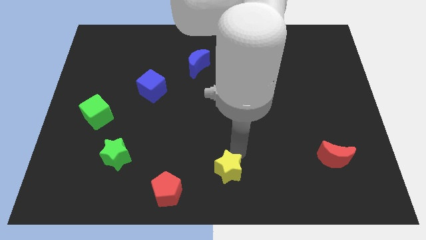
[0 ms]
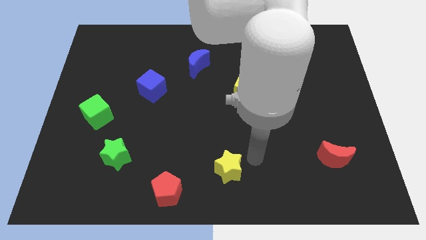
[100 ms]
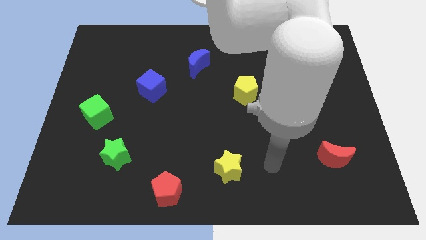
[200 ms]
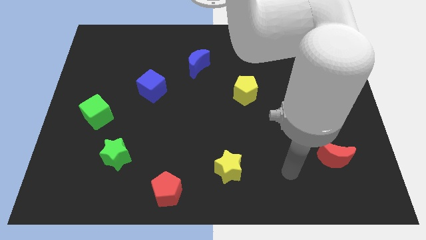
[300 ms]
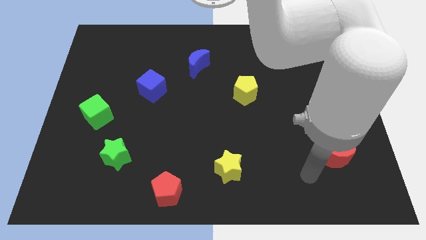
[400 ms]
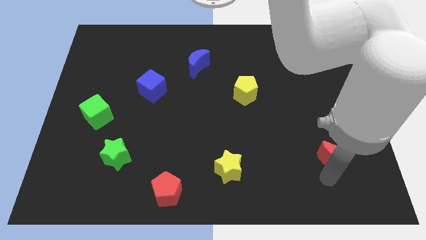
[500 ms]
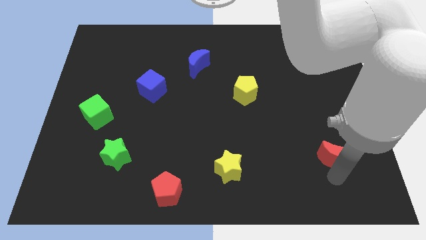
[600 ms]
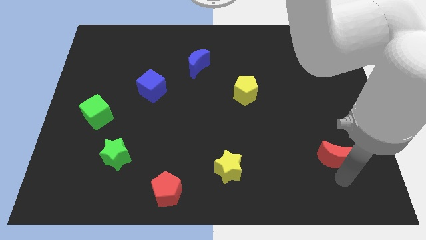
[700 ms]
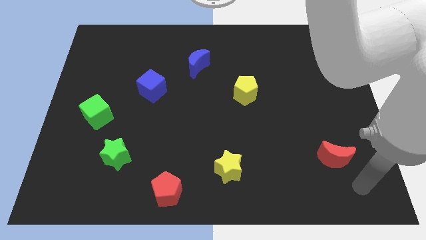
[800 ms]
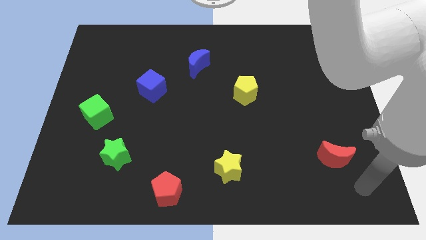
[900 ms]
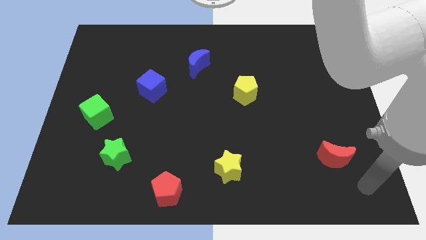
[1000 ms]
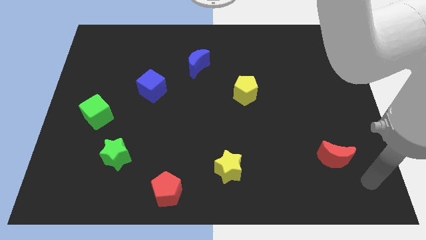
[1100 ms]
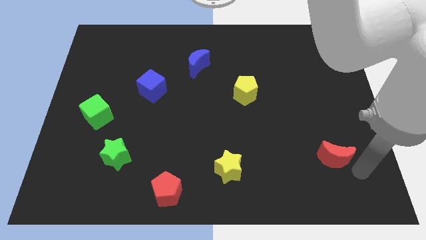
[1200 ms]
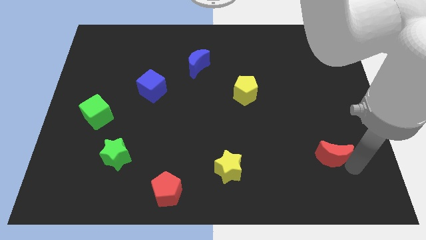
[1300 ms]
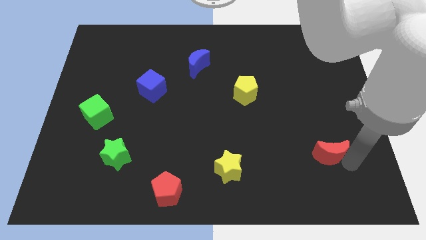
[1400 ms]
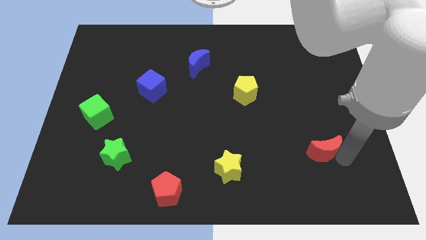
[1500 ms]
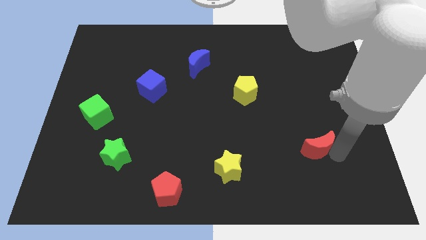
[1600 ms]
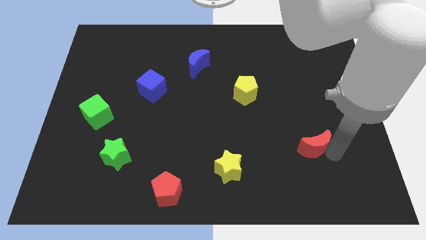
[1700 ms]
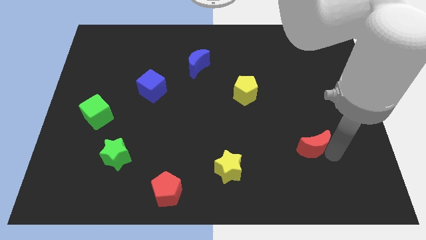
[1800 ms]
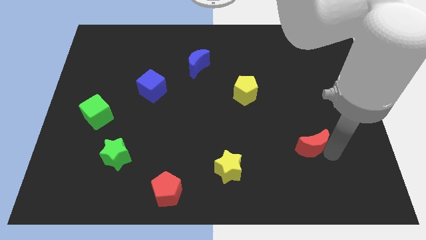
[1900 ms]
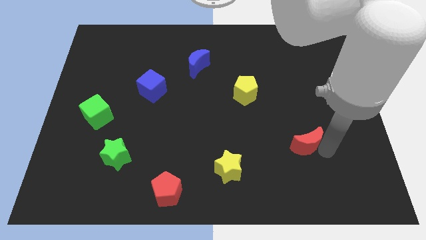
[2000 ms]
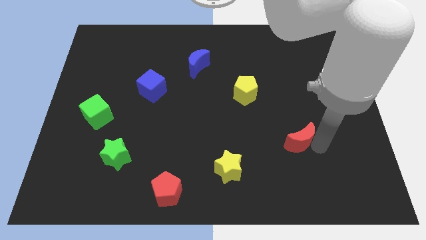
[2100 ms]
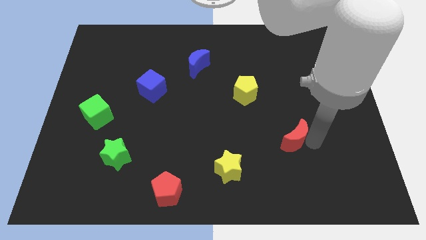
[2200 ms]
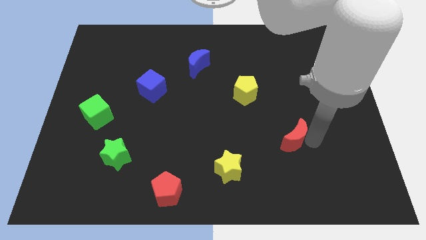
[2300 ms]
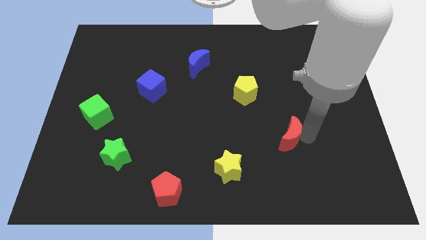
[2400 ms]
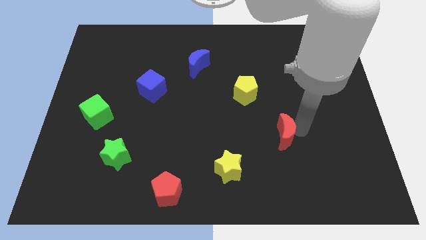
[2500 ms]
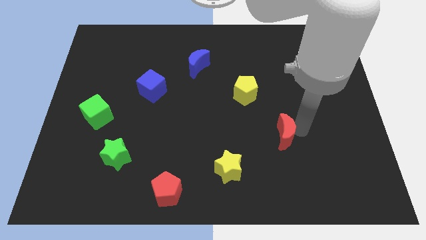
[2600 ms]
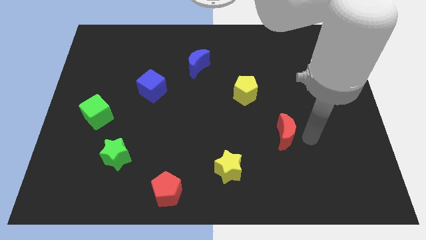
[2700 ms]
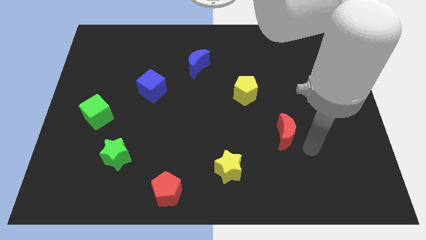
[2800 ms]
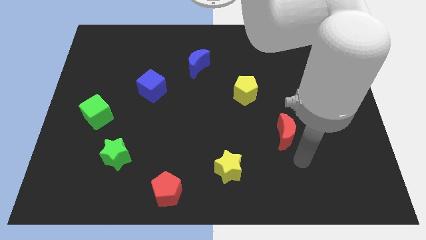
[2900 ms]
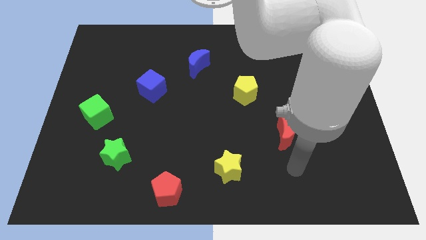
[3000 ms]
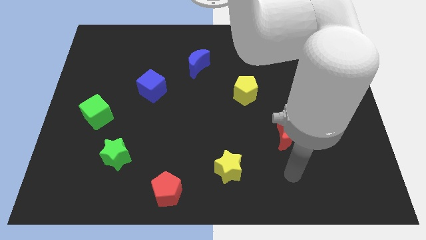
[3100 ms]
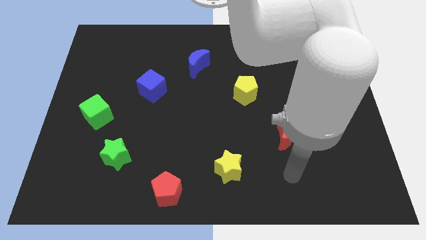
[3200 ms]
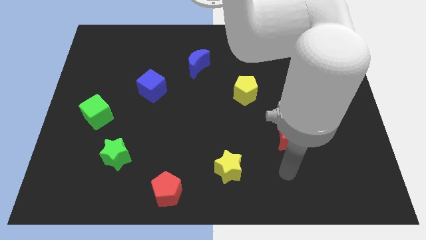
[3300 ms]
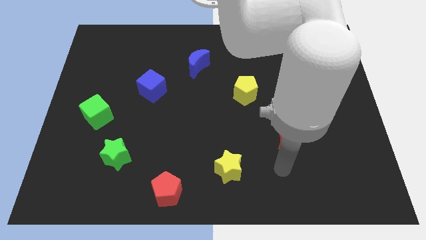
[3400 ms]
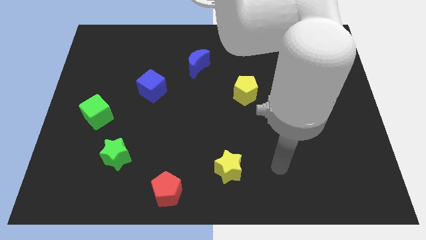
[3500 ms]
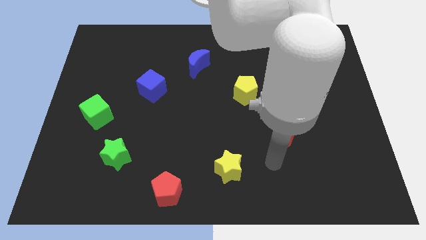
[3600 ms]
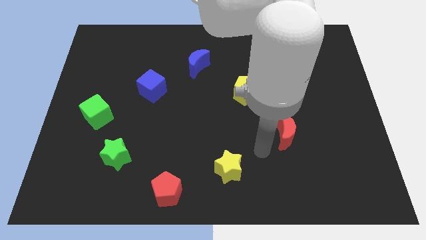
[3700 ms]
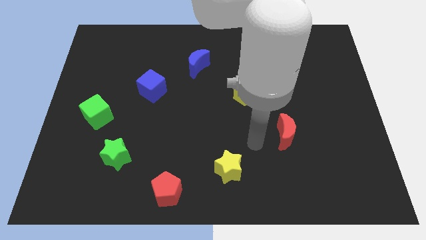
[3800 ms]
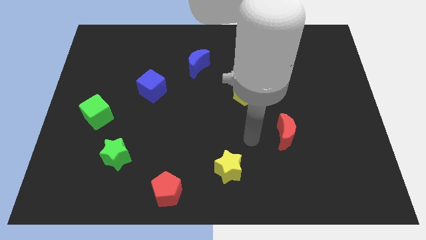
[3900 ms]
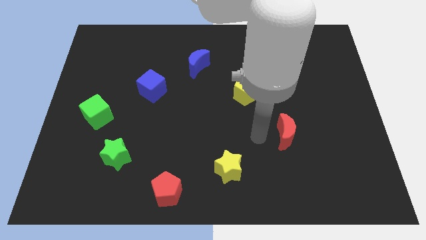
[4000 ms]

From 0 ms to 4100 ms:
move red crescent towards its right

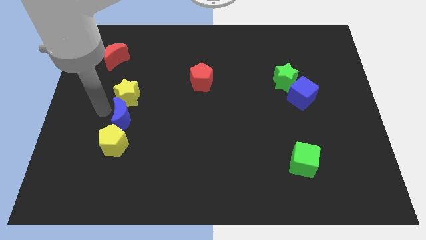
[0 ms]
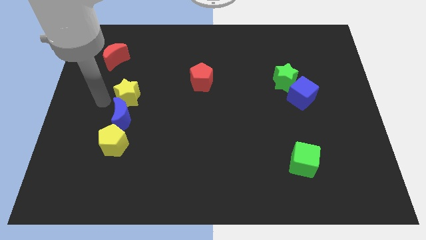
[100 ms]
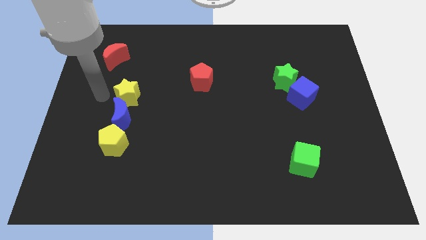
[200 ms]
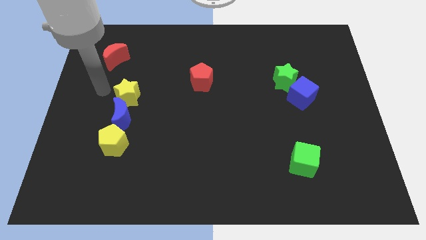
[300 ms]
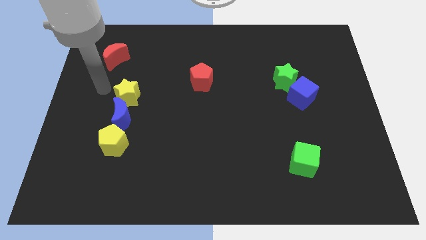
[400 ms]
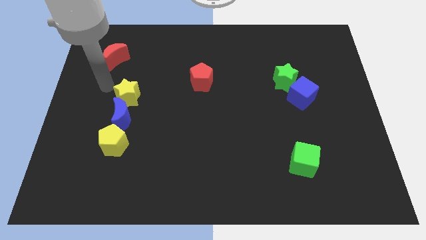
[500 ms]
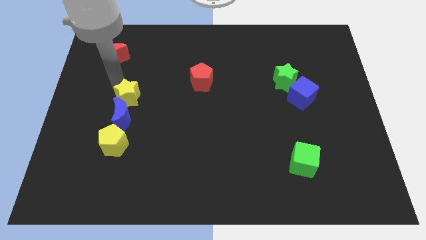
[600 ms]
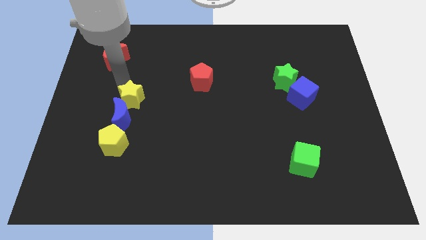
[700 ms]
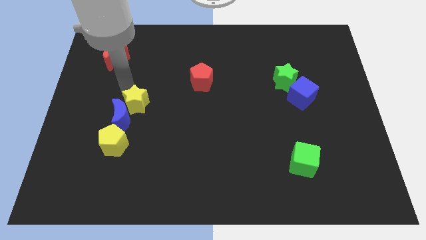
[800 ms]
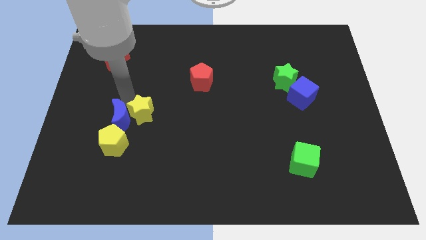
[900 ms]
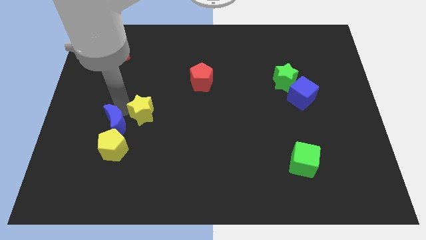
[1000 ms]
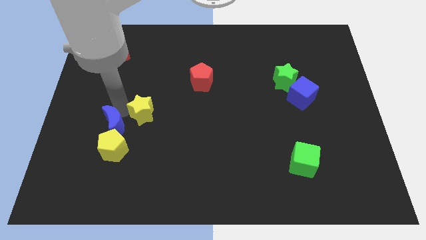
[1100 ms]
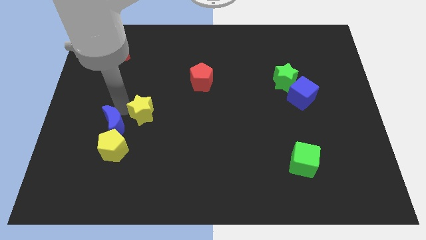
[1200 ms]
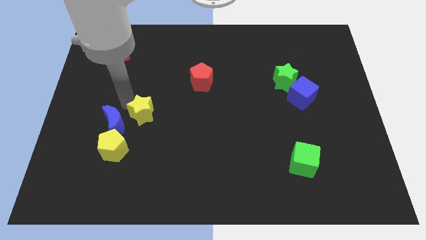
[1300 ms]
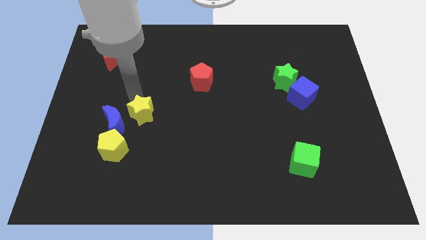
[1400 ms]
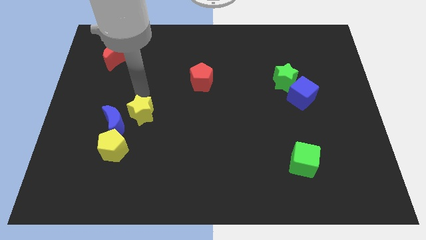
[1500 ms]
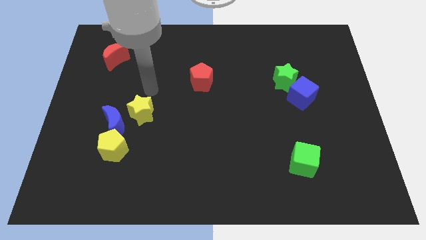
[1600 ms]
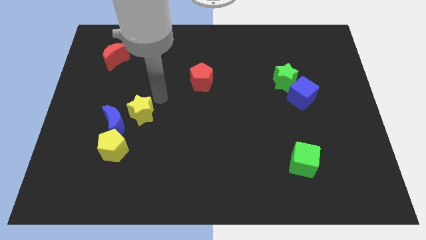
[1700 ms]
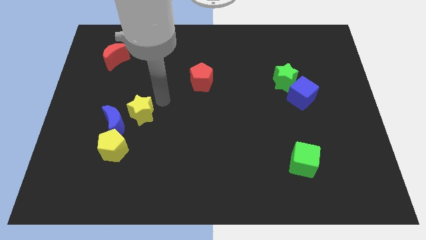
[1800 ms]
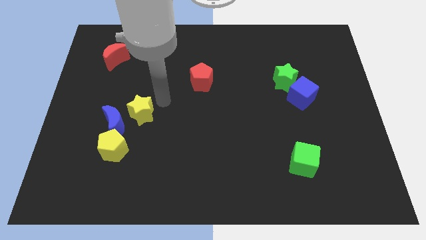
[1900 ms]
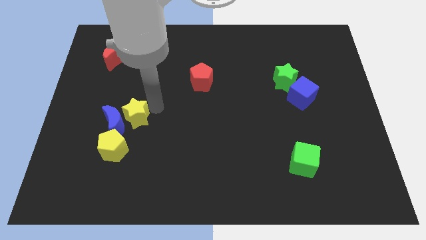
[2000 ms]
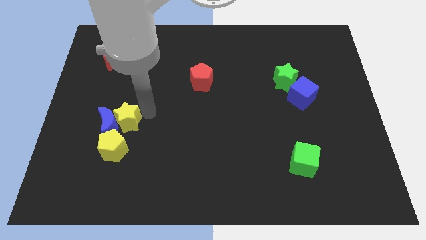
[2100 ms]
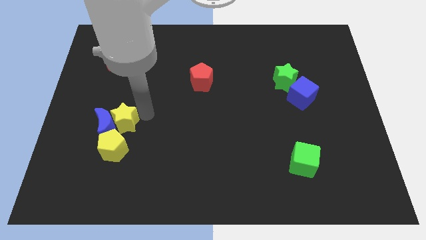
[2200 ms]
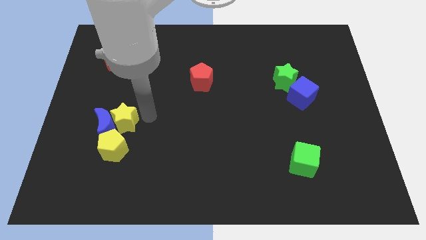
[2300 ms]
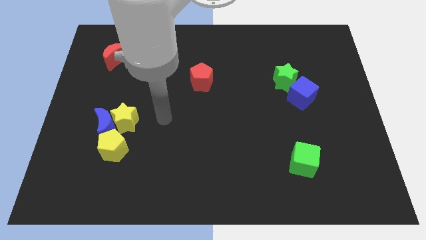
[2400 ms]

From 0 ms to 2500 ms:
place the yellow star at the top of the yellow pentagon

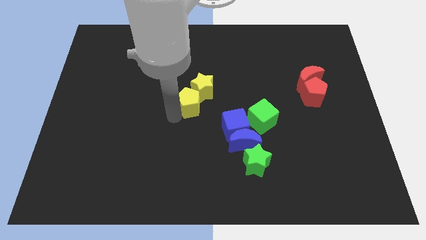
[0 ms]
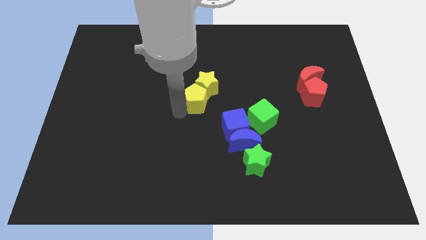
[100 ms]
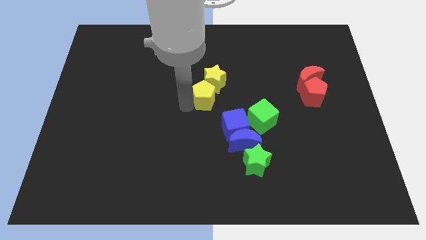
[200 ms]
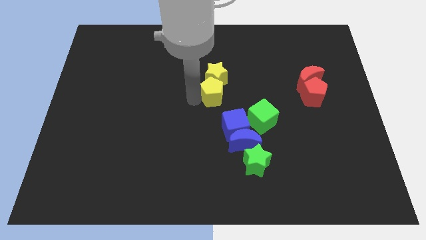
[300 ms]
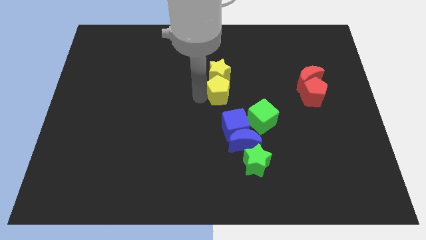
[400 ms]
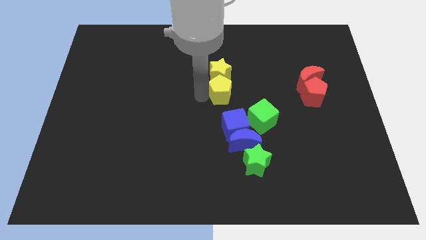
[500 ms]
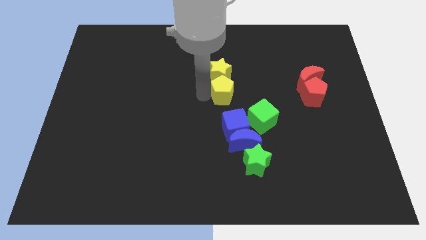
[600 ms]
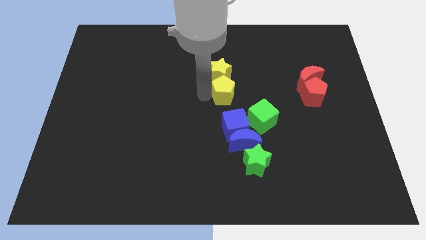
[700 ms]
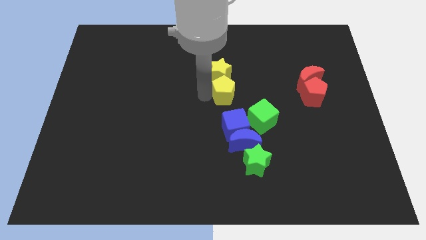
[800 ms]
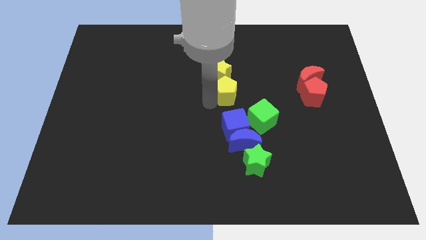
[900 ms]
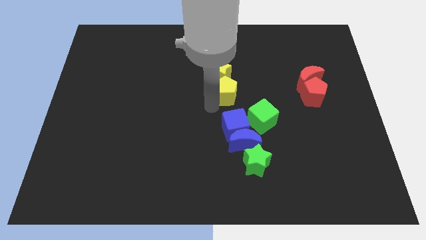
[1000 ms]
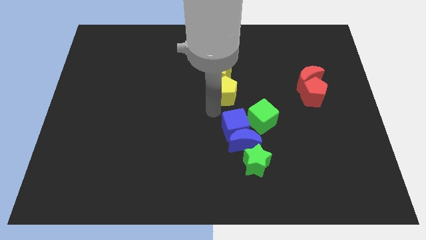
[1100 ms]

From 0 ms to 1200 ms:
move the yellow pentagon to the top of the blue cube

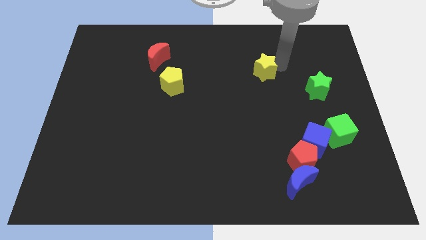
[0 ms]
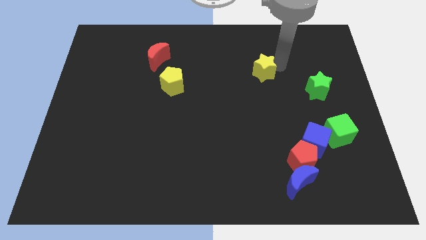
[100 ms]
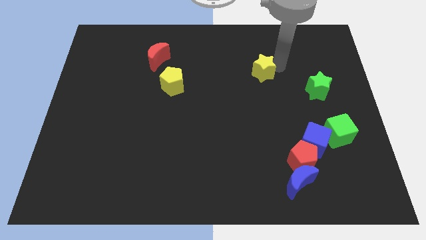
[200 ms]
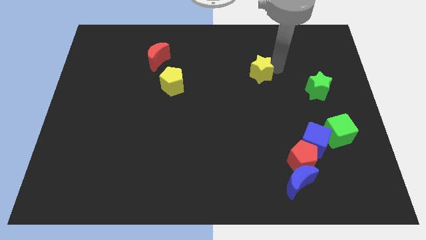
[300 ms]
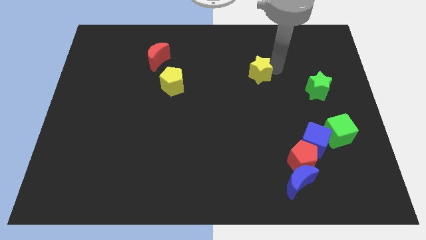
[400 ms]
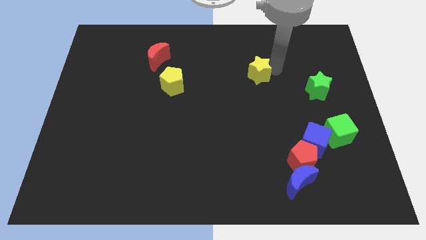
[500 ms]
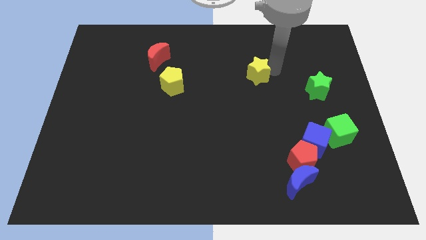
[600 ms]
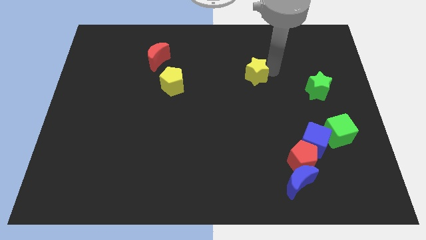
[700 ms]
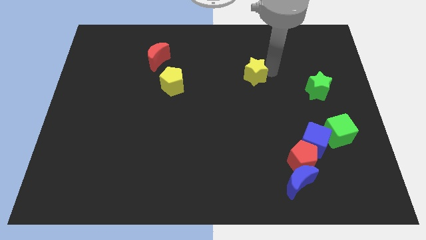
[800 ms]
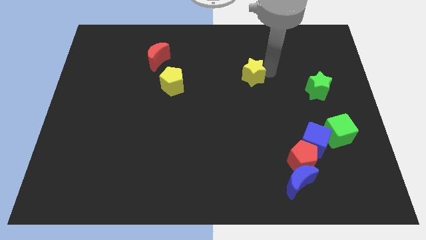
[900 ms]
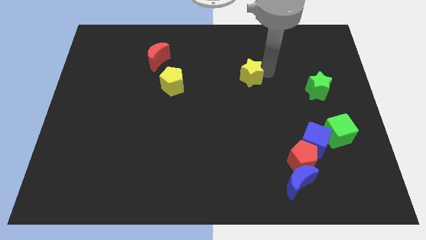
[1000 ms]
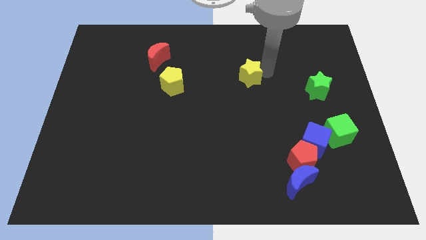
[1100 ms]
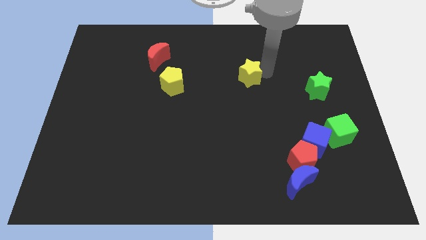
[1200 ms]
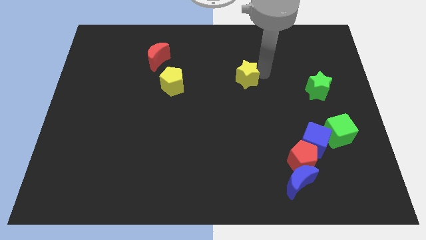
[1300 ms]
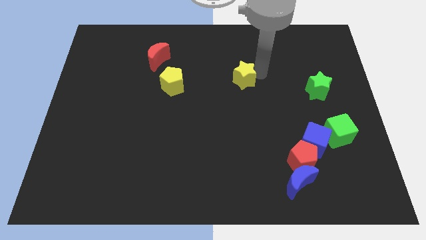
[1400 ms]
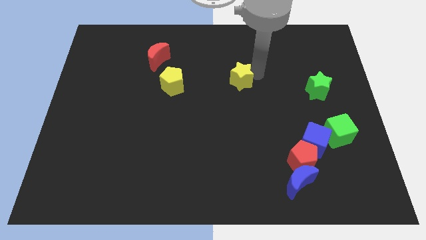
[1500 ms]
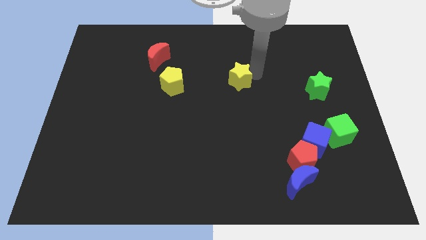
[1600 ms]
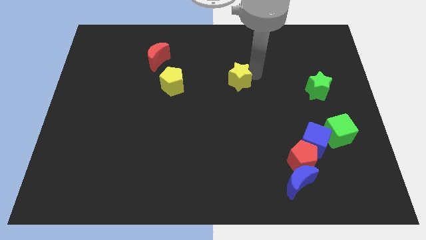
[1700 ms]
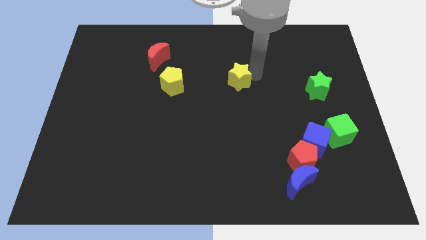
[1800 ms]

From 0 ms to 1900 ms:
place the yellow star parallel to yellow pentagon
